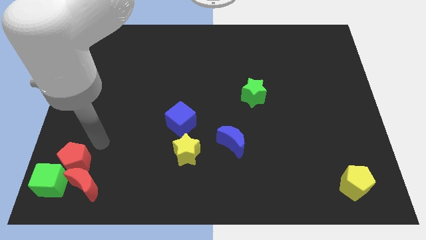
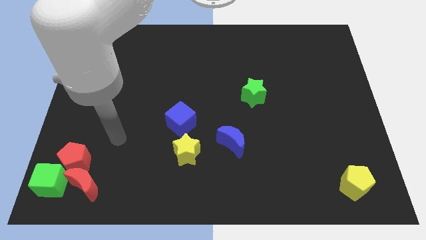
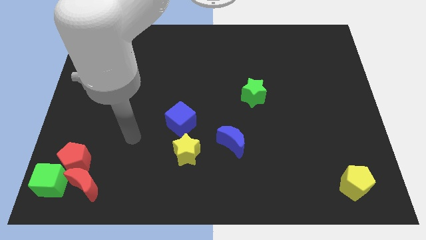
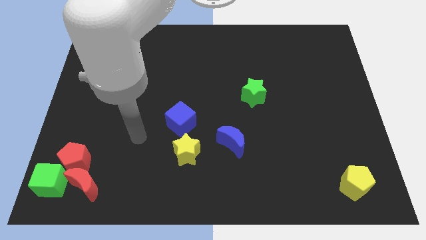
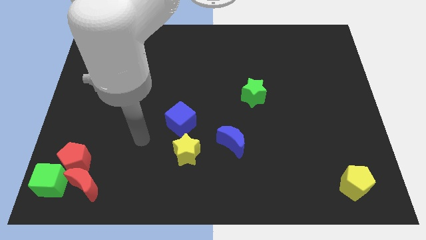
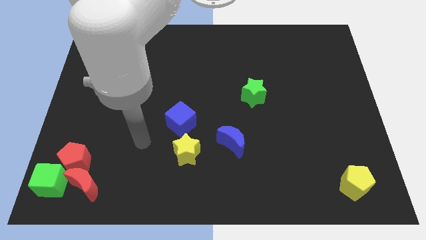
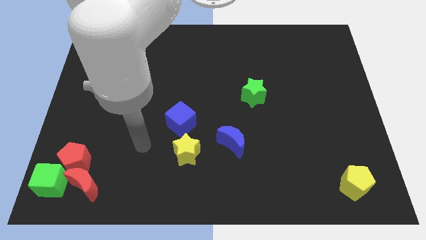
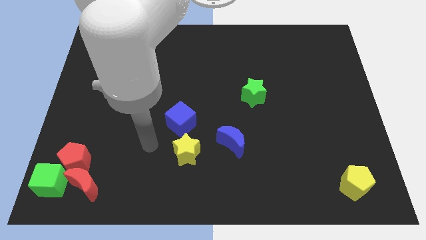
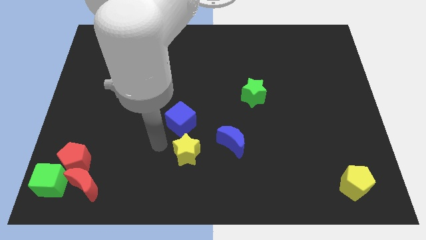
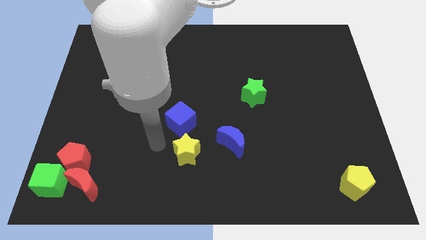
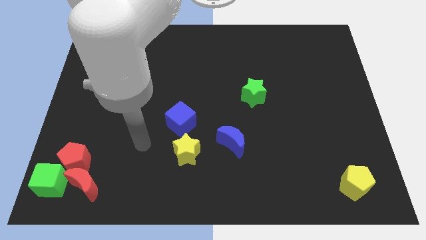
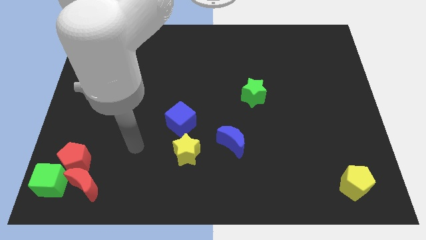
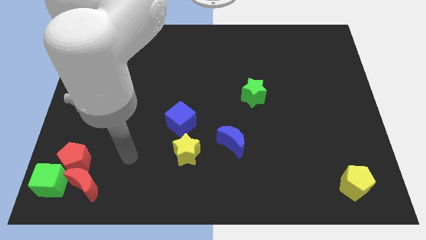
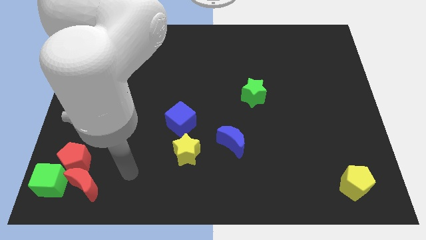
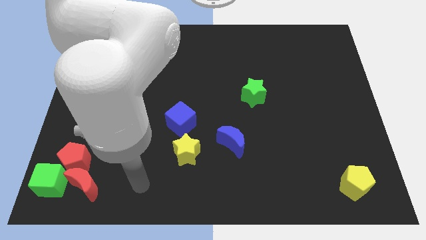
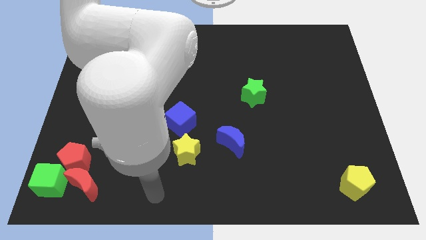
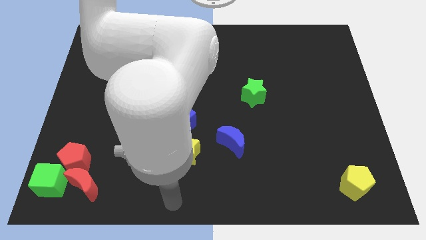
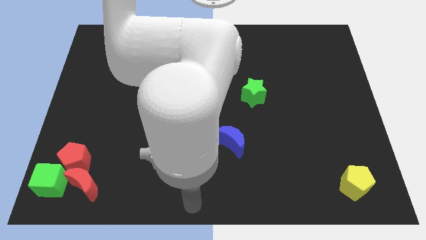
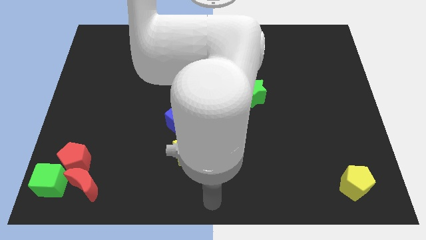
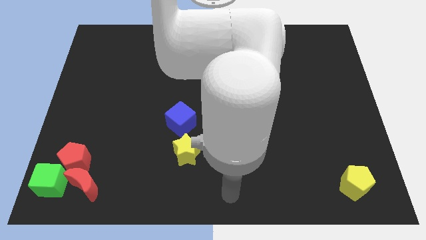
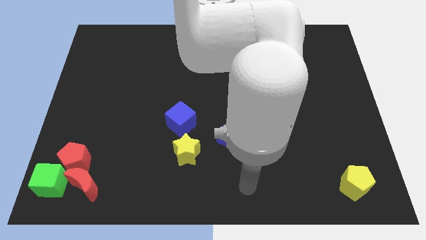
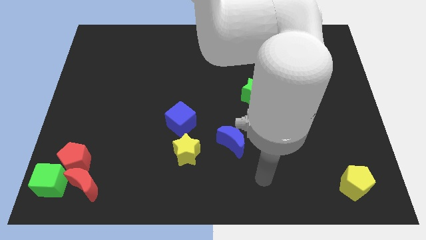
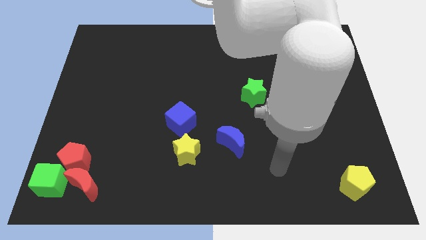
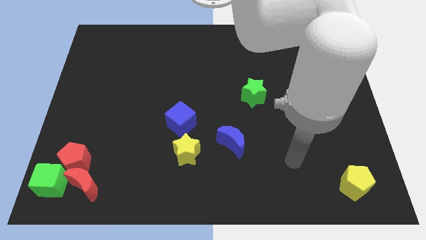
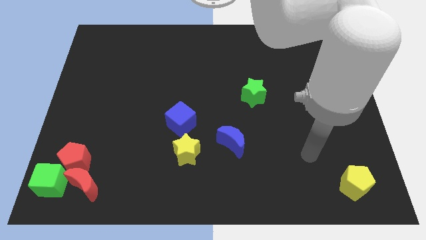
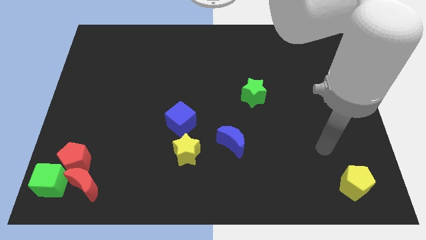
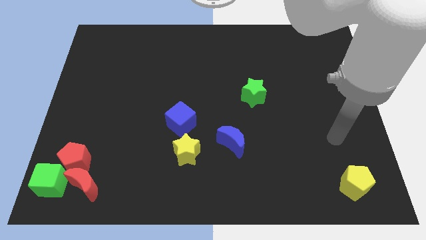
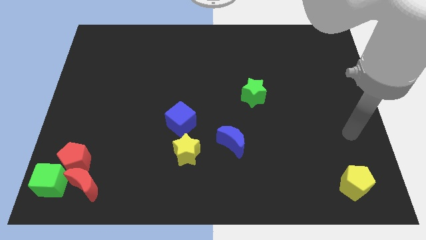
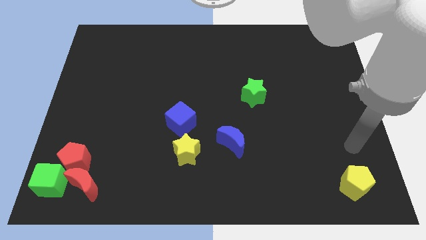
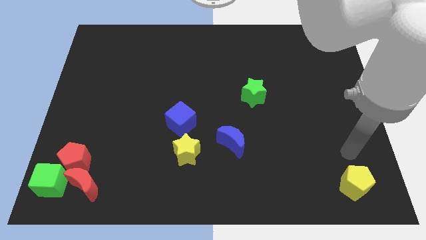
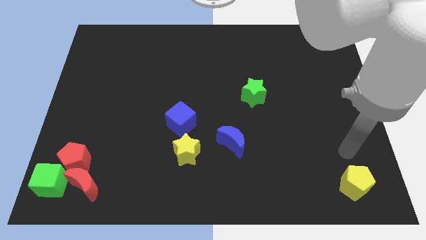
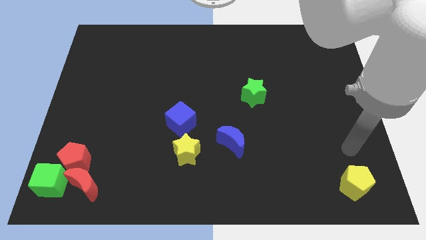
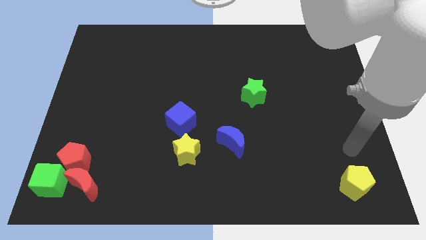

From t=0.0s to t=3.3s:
point the arm above the yellow pentagon

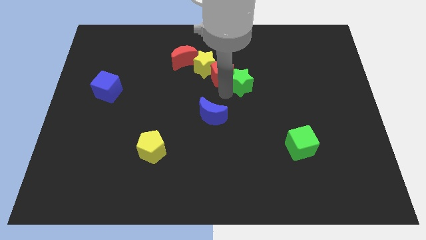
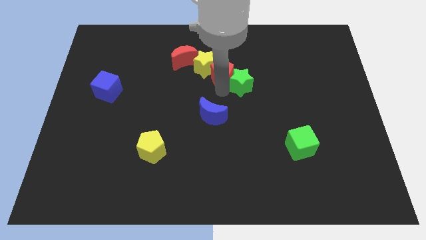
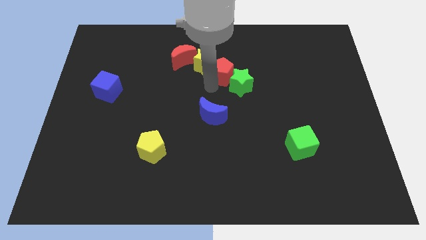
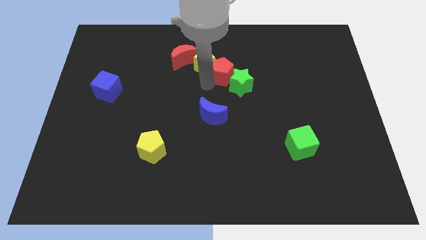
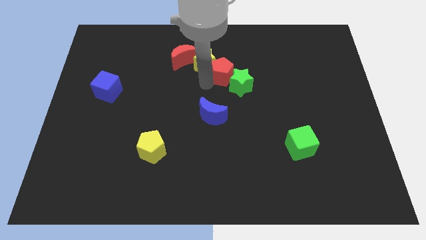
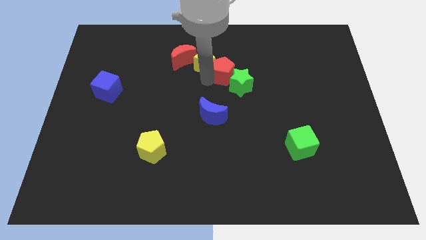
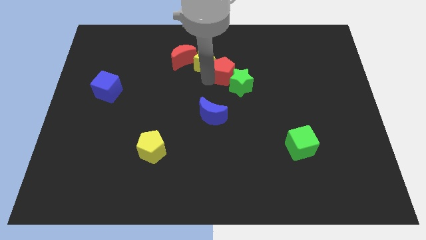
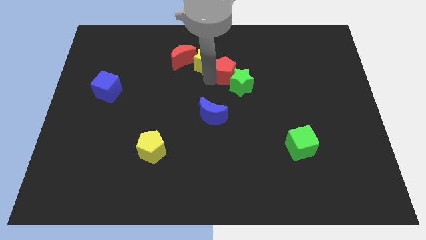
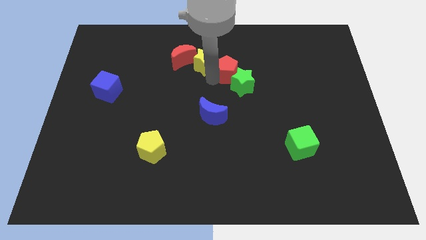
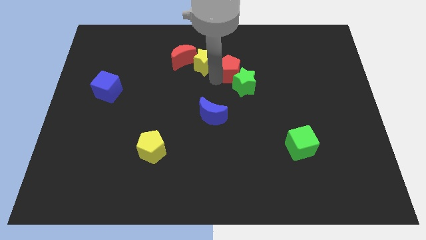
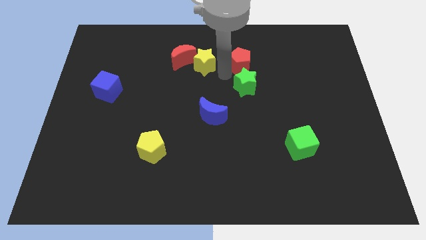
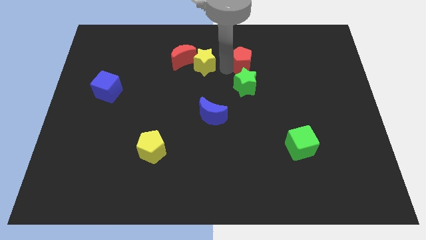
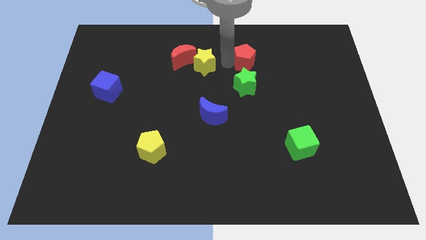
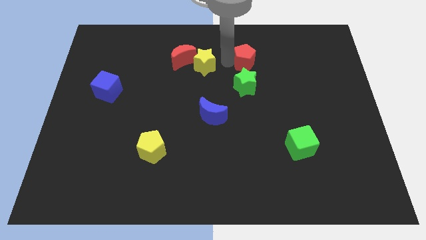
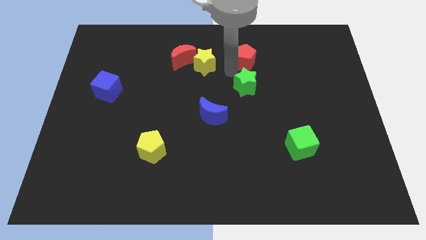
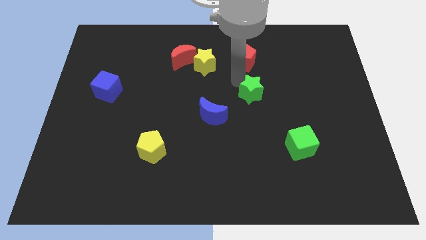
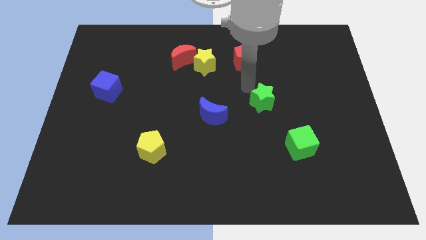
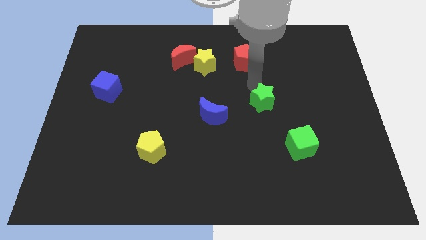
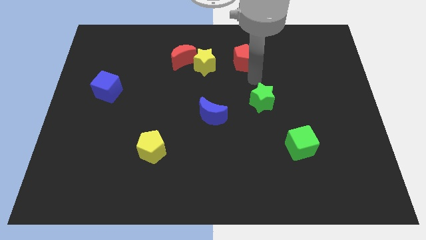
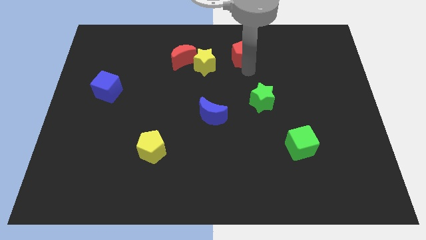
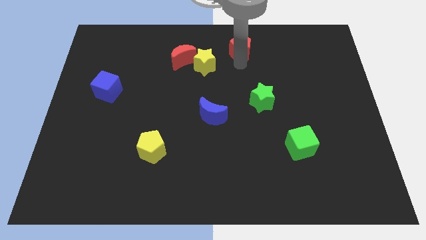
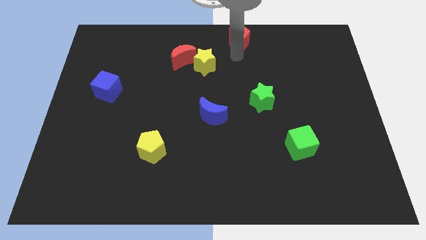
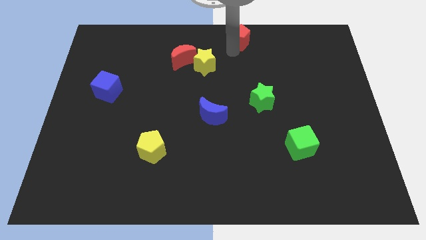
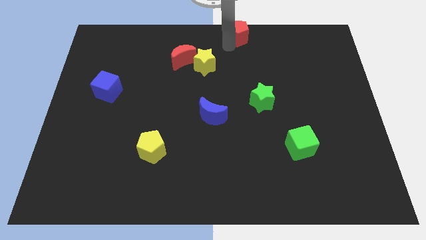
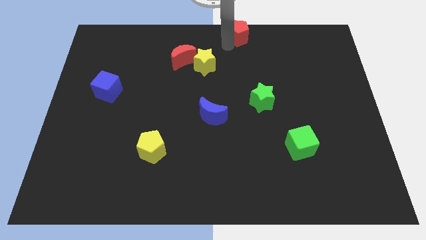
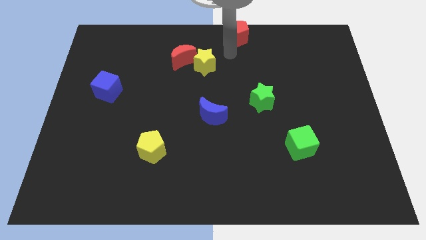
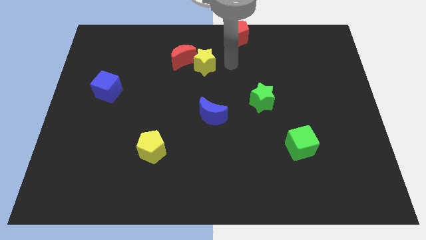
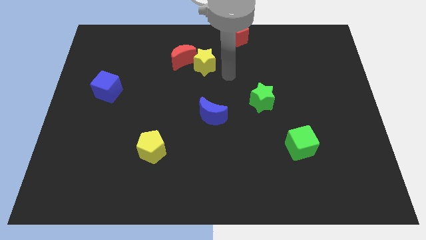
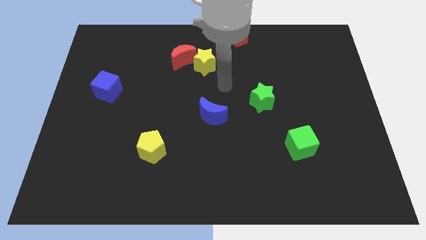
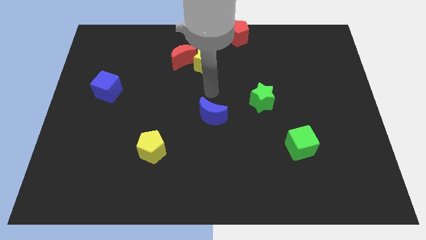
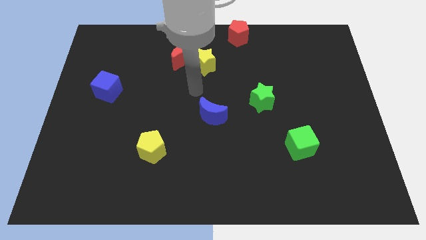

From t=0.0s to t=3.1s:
move red pentagon to the top left

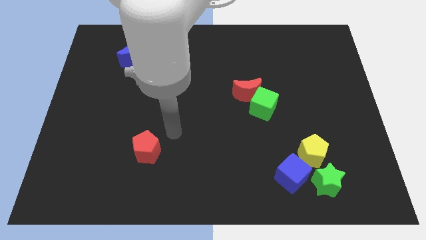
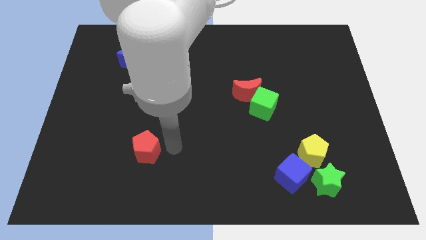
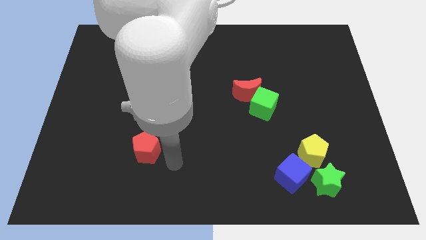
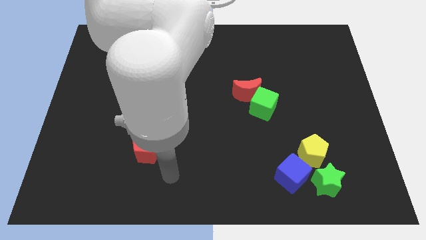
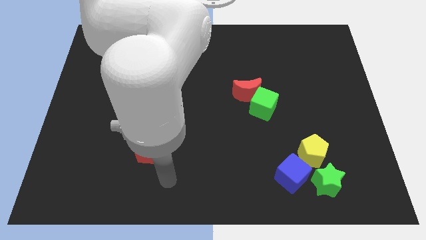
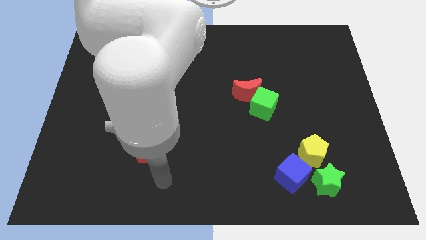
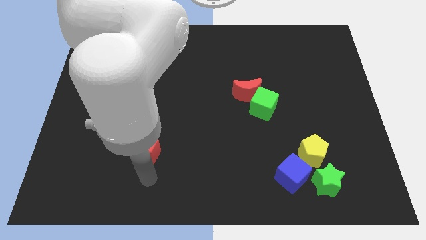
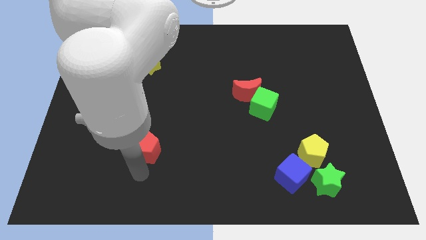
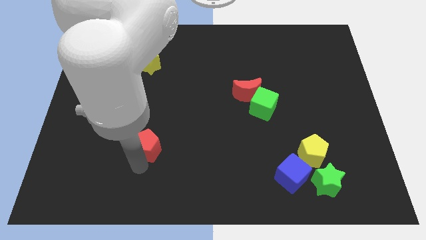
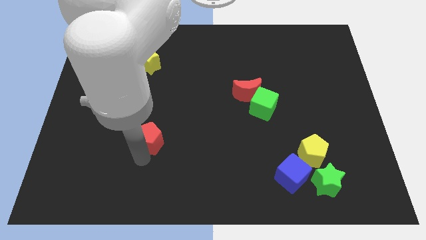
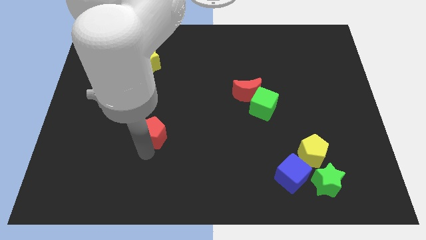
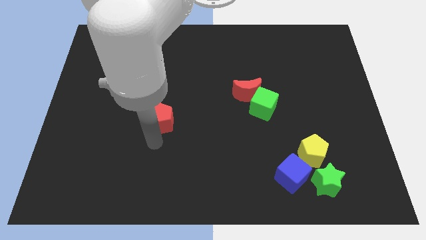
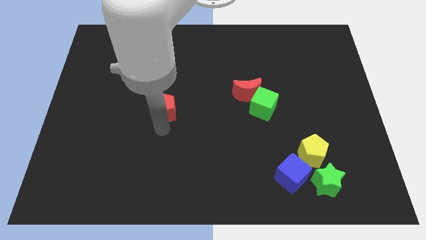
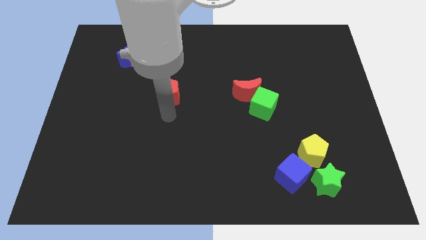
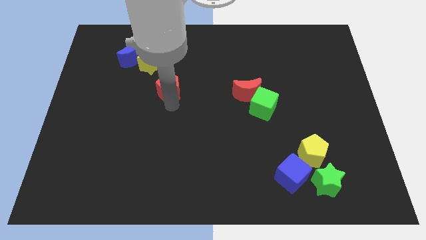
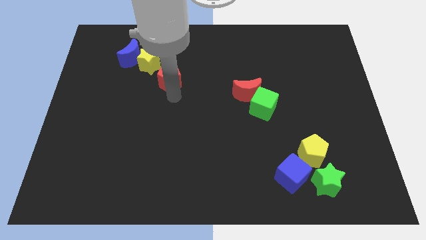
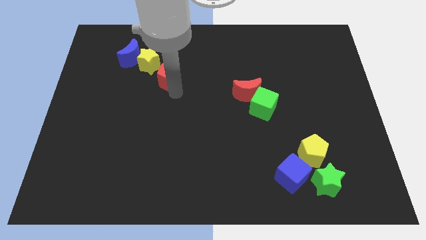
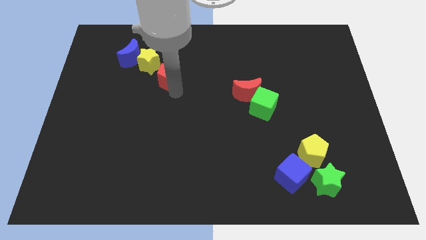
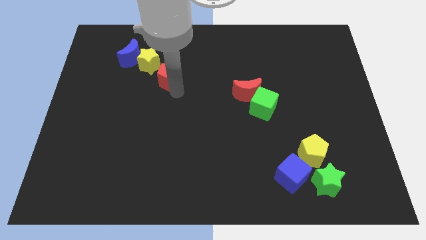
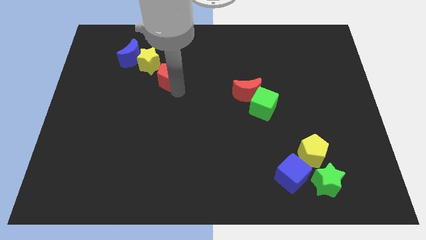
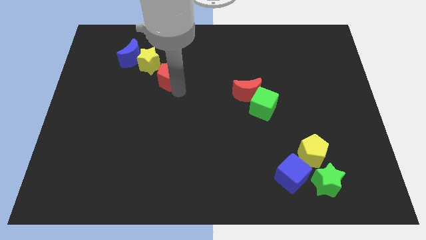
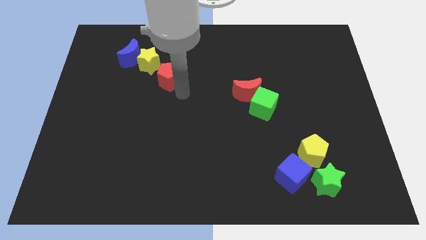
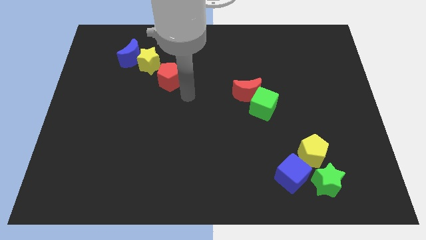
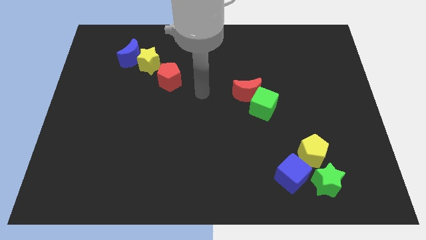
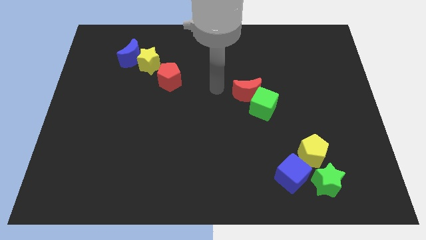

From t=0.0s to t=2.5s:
move the red pentagon diagonal to the yellow star

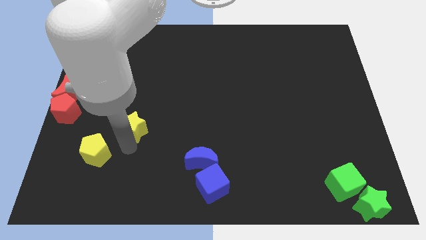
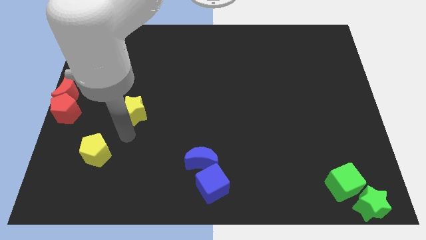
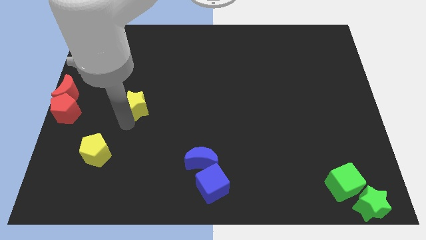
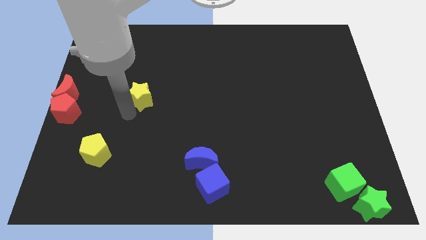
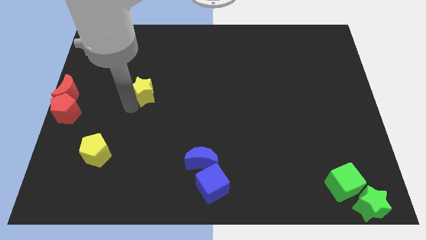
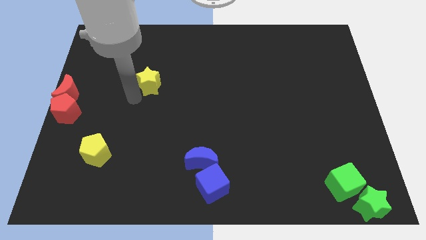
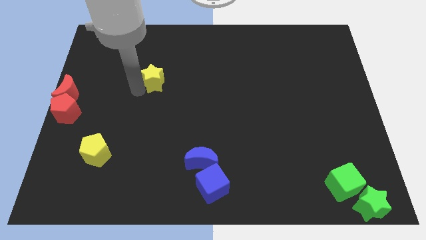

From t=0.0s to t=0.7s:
move the yellow star slightly up
